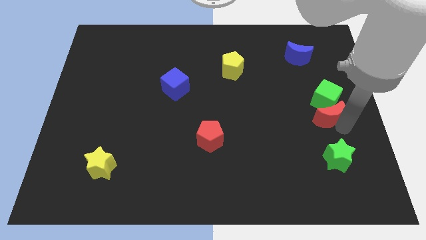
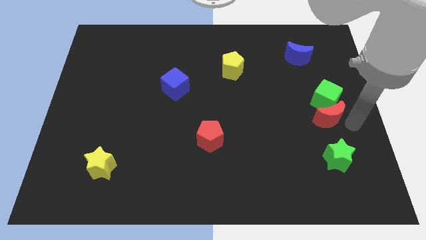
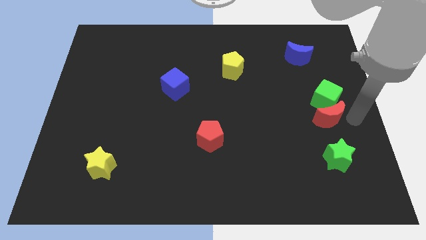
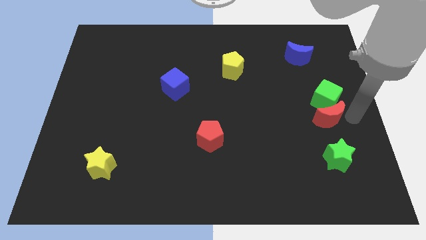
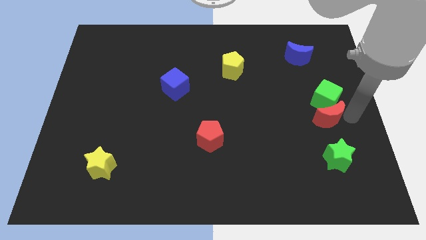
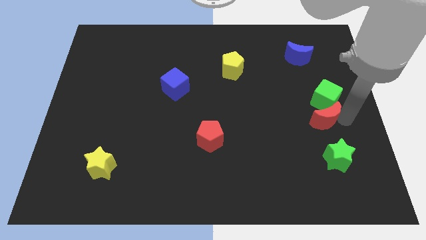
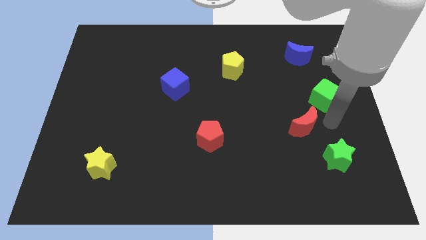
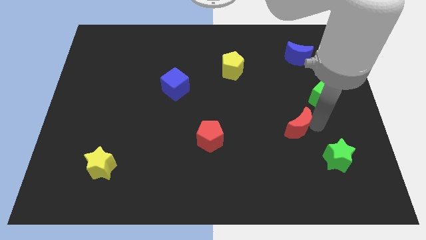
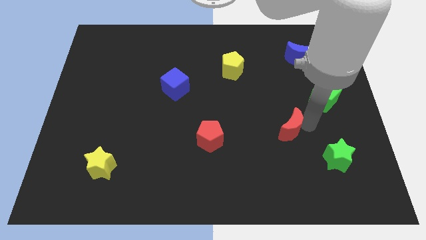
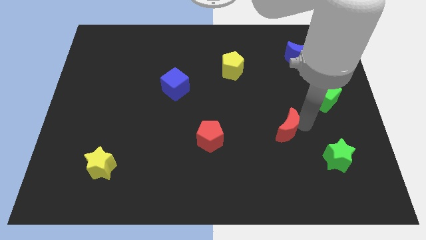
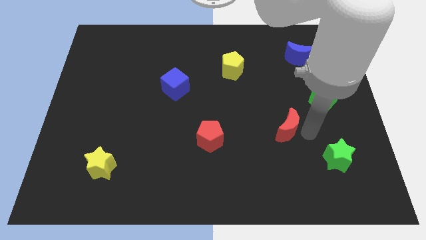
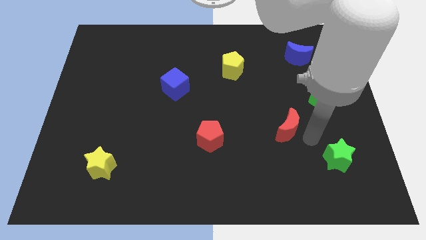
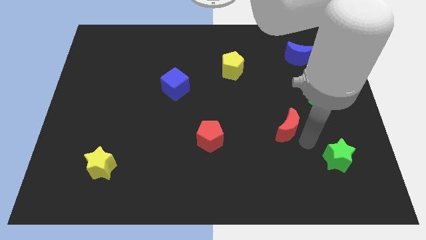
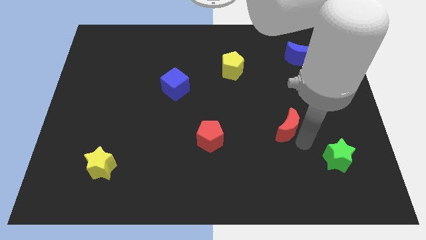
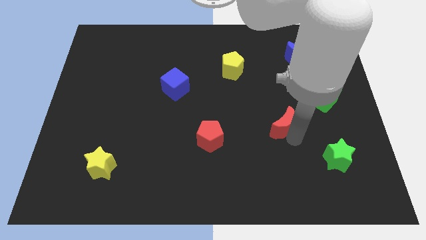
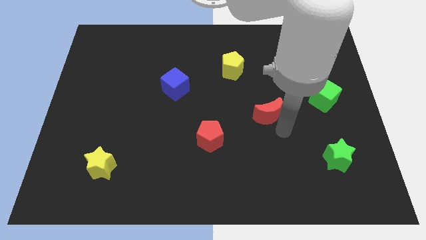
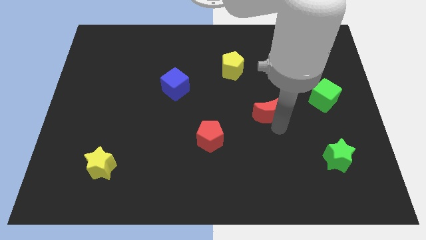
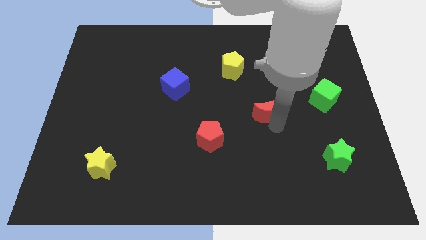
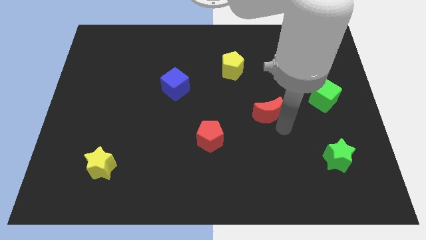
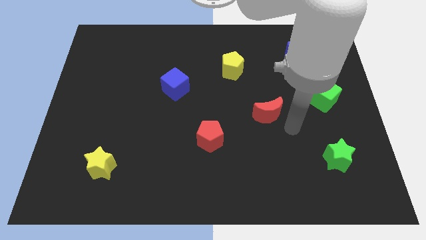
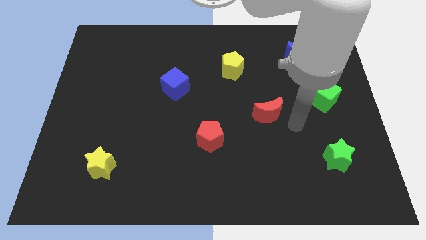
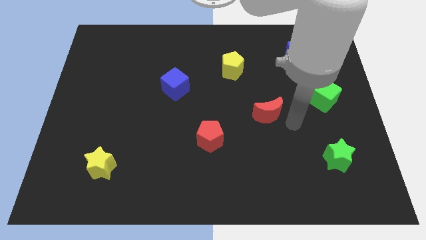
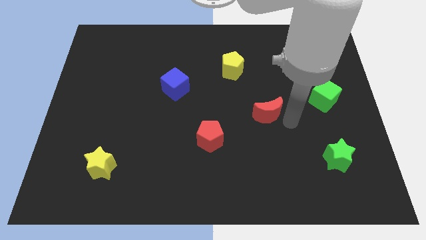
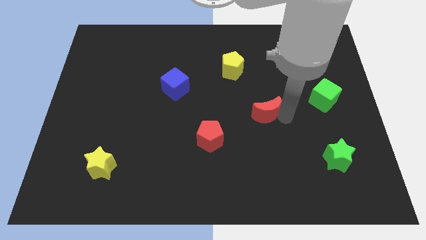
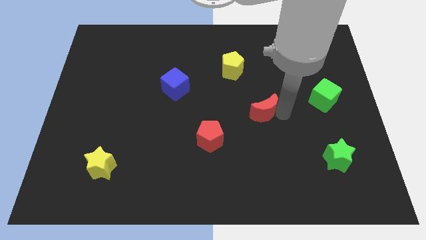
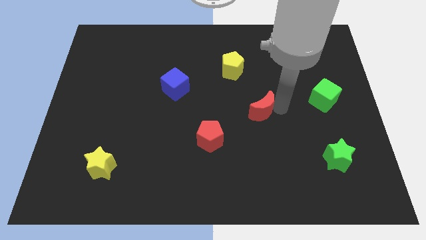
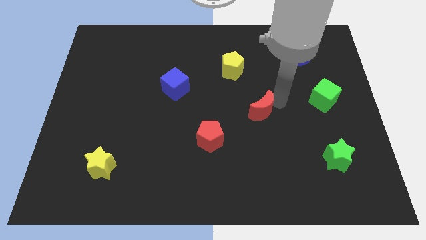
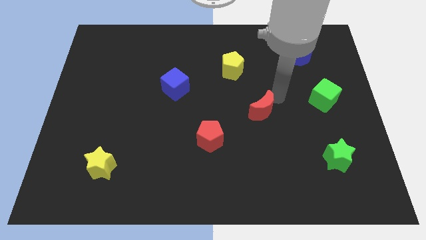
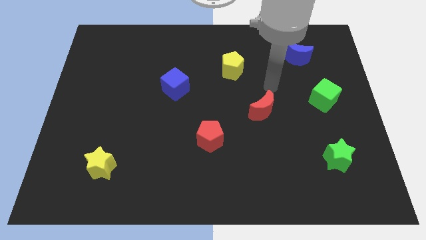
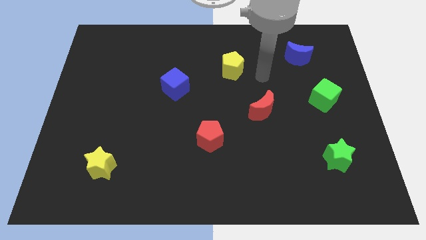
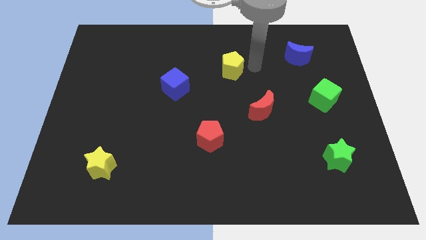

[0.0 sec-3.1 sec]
separate red moon from green cube

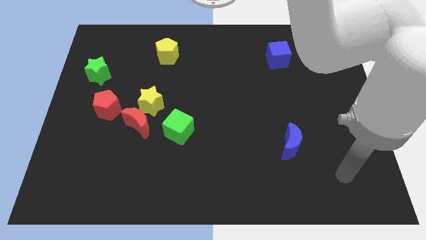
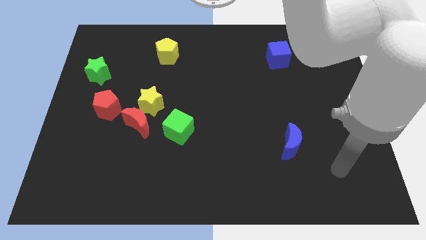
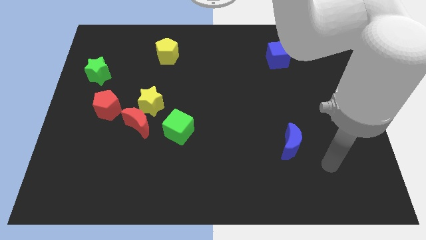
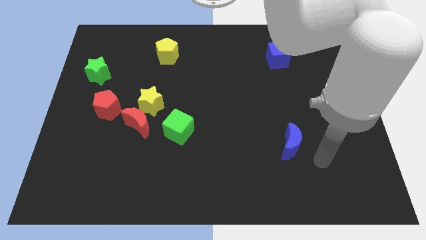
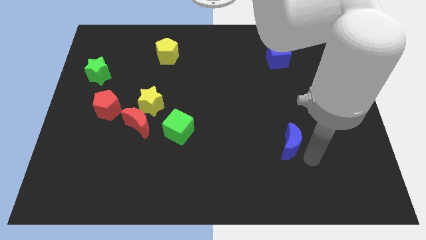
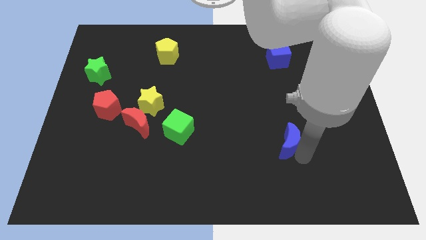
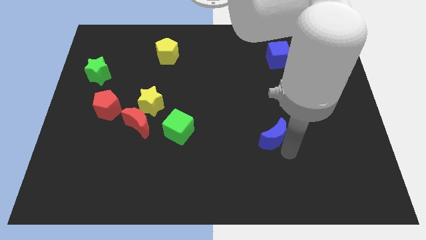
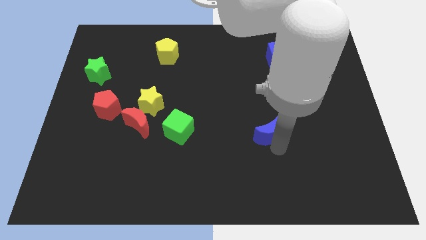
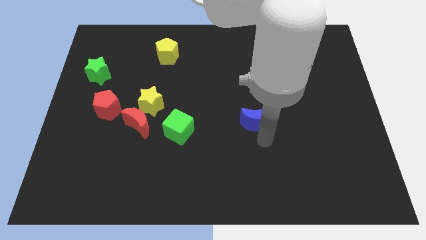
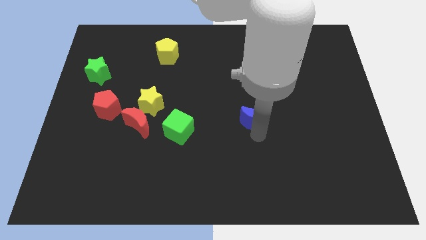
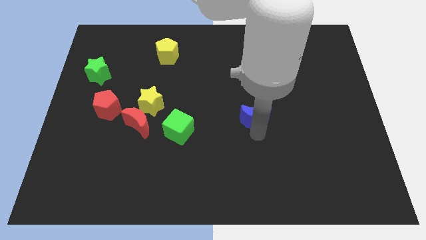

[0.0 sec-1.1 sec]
push blue moon slightly up

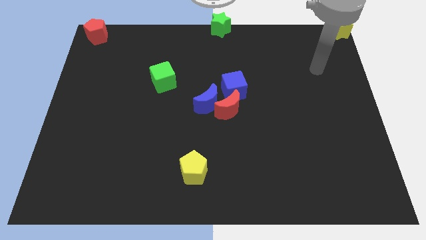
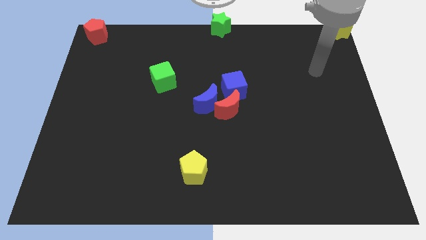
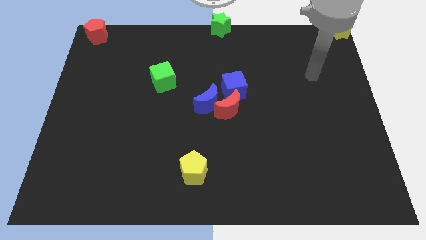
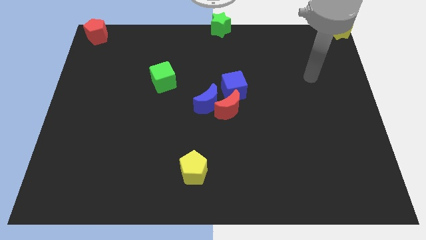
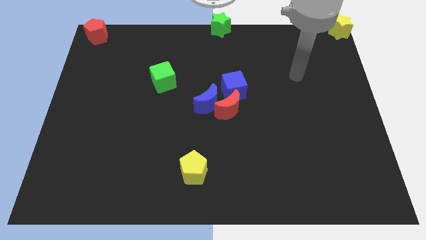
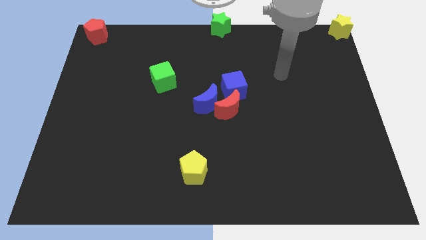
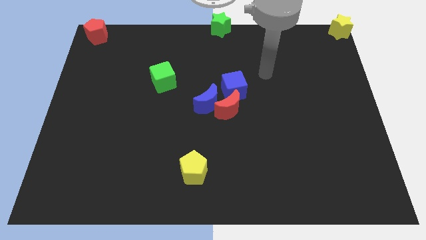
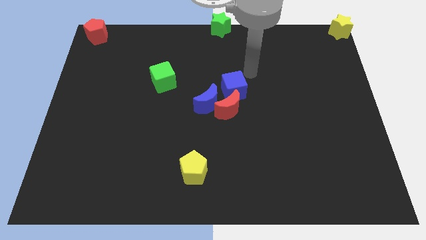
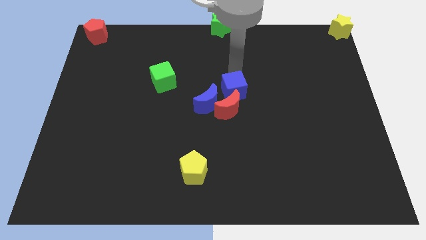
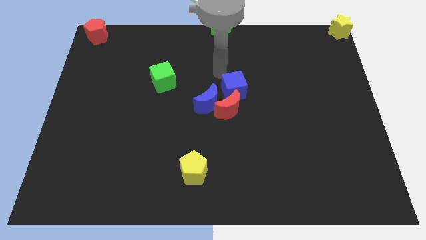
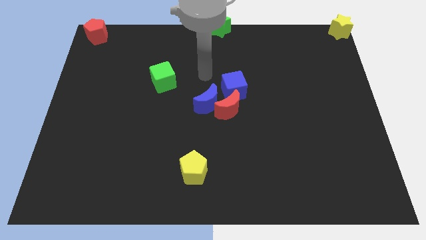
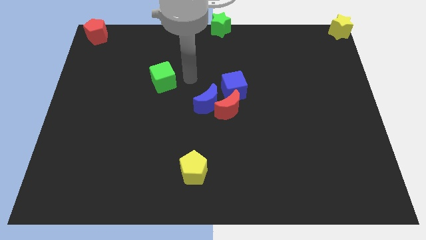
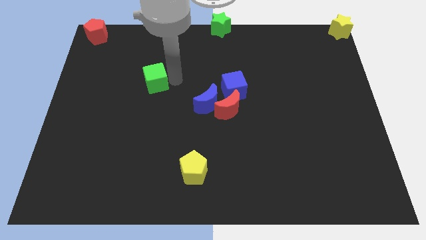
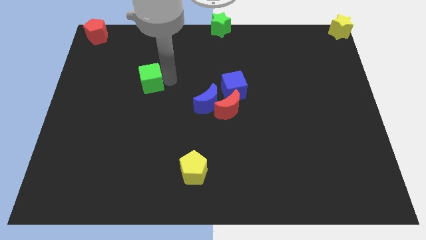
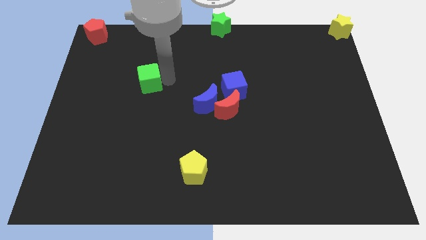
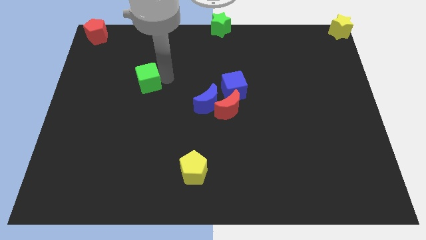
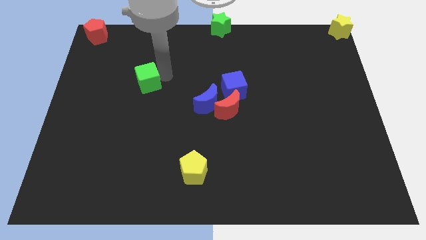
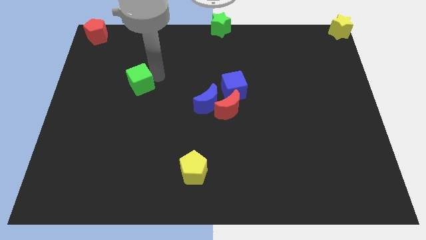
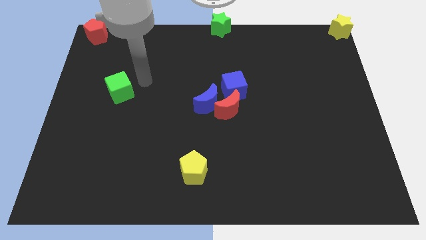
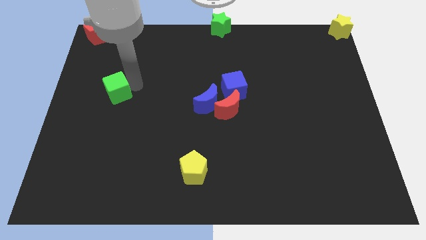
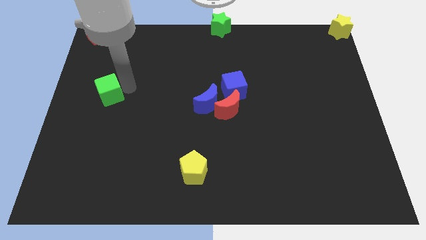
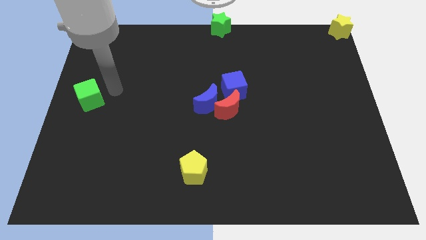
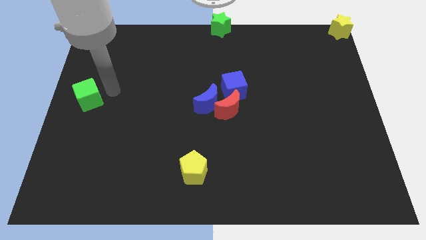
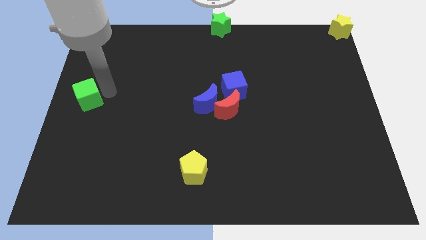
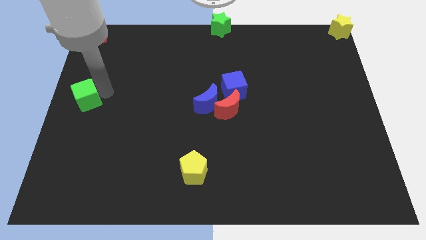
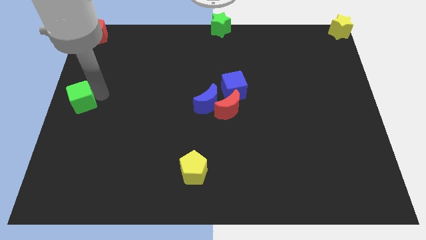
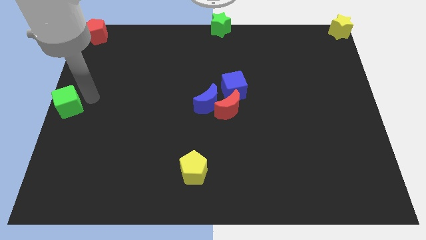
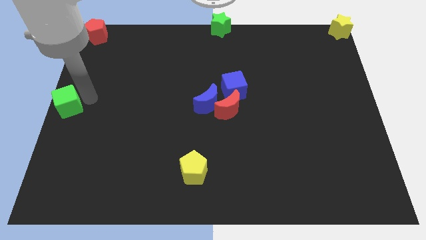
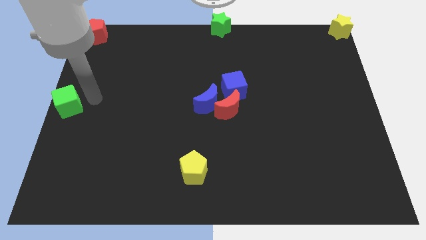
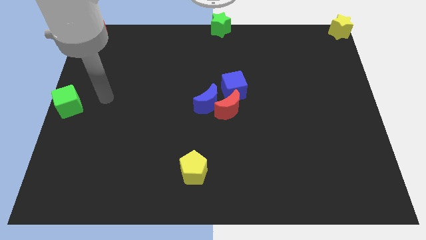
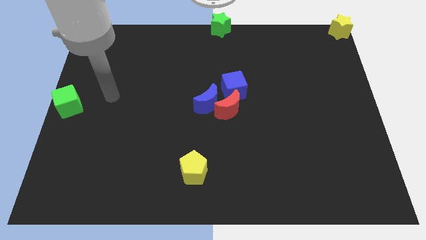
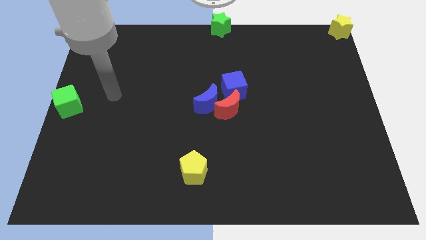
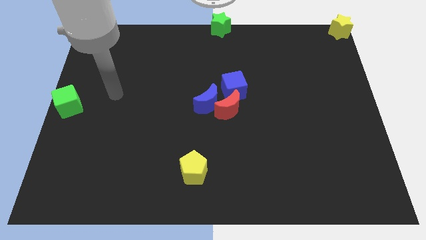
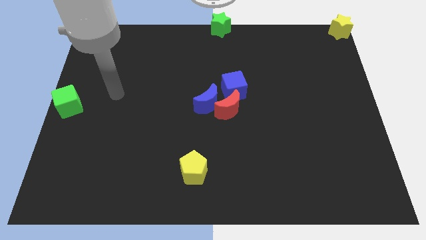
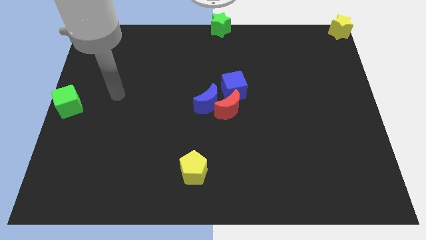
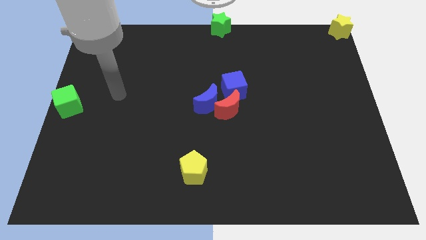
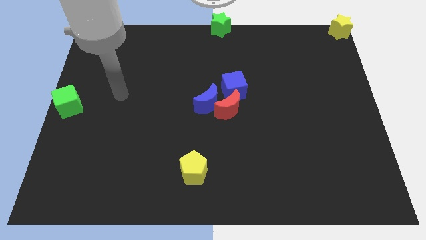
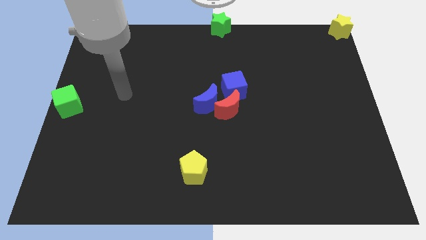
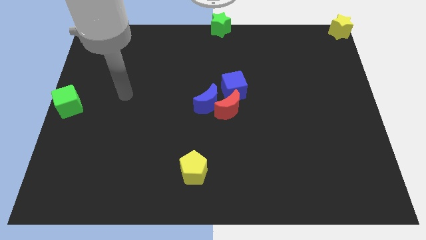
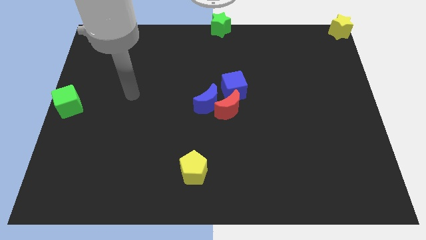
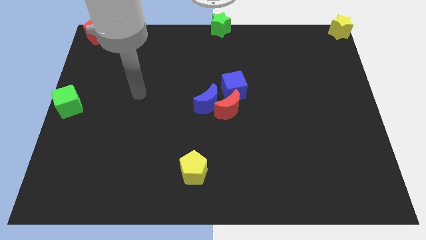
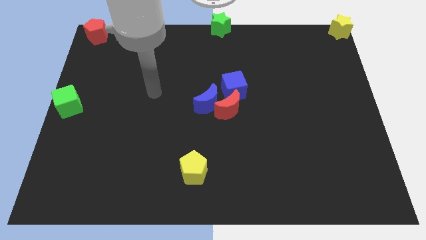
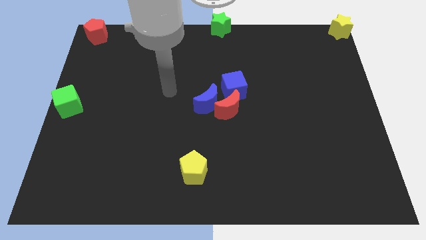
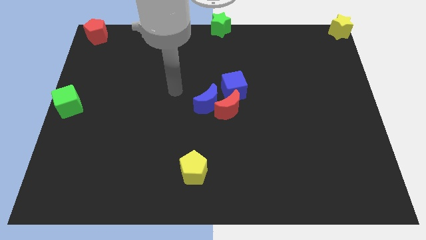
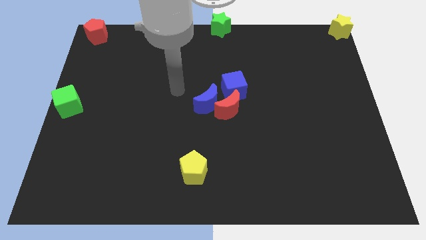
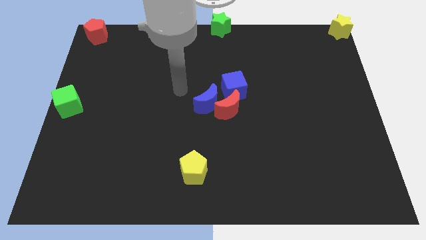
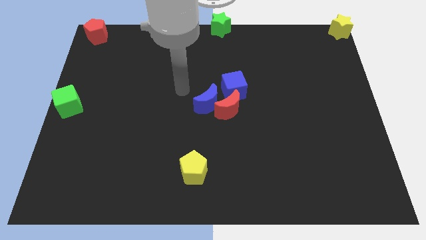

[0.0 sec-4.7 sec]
push the green cube to the left center of the board
